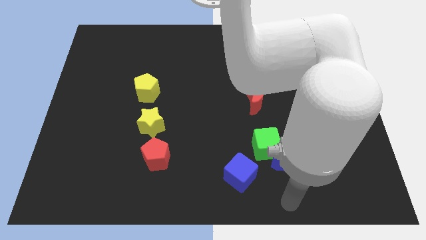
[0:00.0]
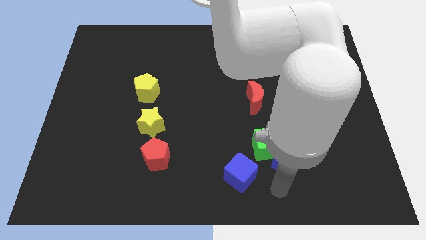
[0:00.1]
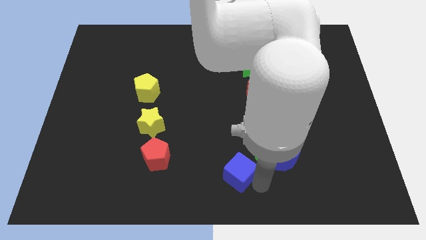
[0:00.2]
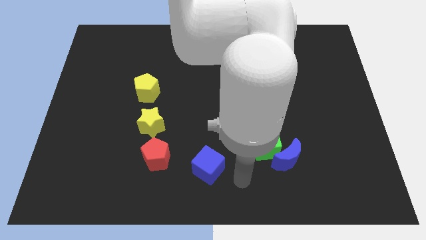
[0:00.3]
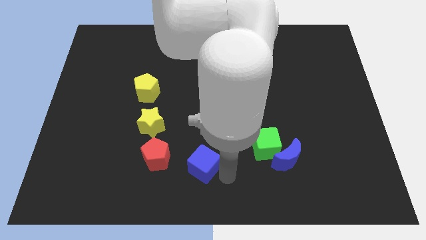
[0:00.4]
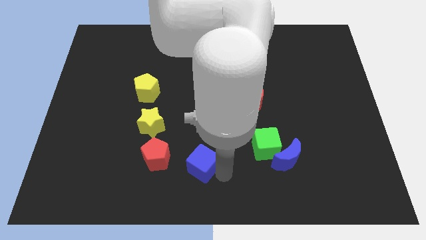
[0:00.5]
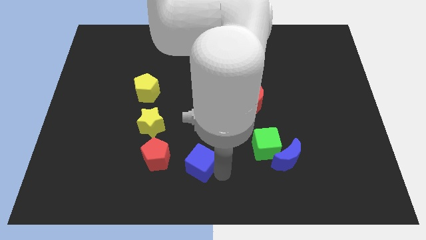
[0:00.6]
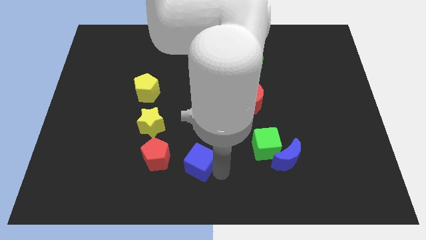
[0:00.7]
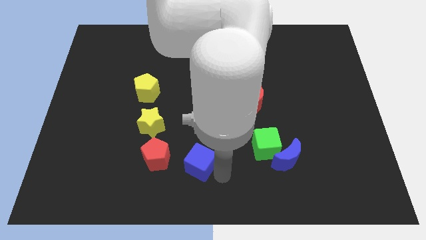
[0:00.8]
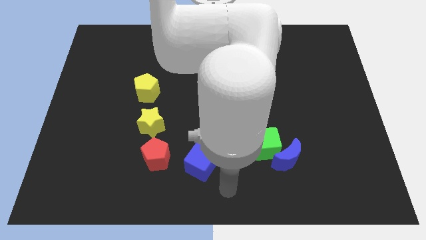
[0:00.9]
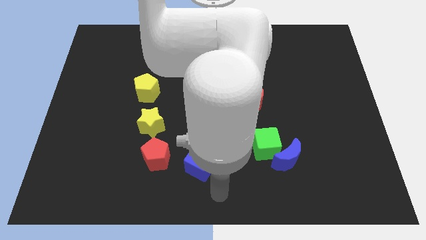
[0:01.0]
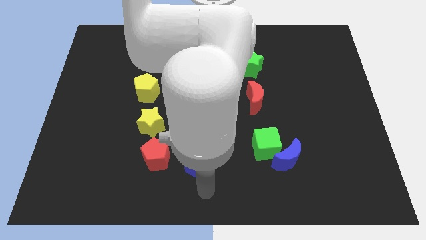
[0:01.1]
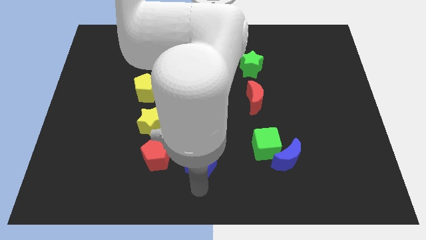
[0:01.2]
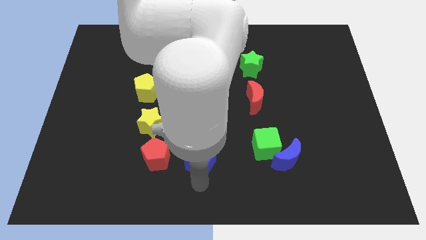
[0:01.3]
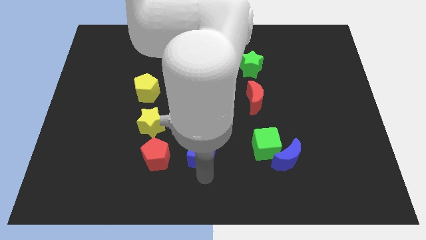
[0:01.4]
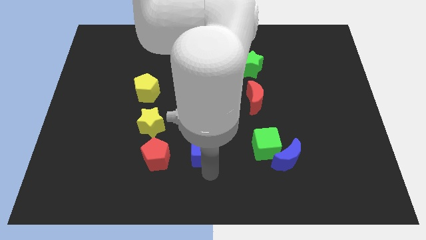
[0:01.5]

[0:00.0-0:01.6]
move the blue cube right to the red pentagon

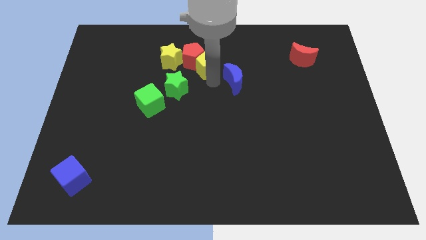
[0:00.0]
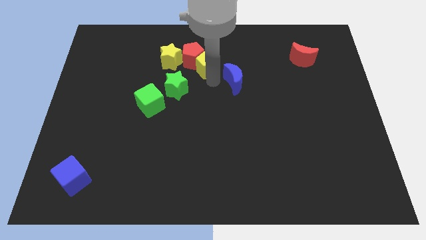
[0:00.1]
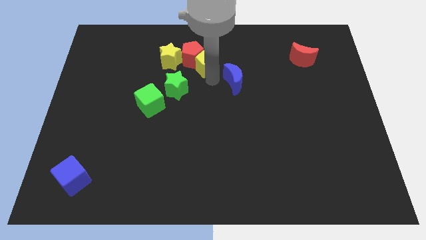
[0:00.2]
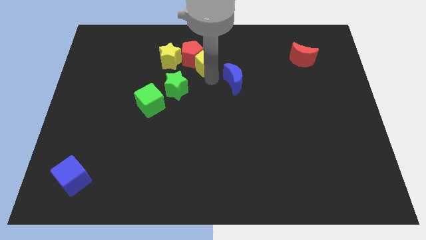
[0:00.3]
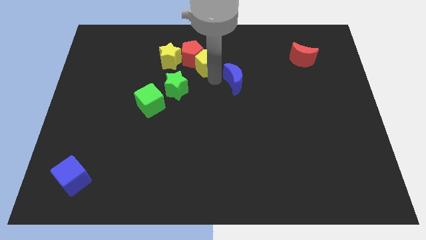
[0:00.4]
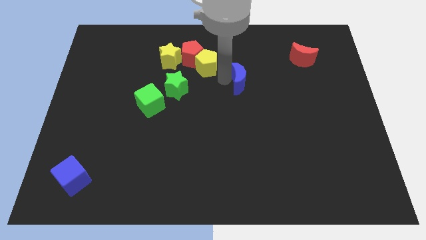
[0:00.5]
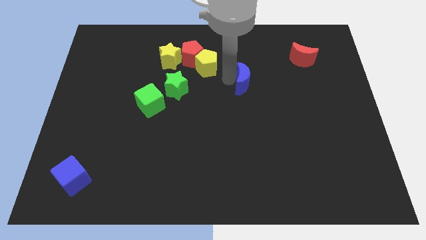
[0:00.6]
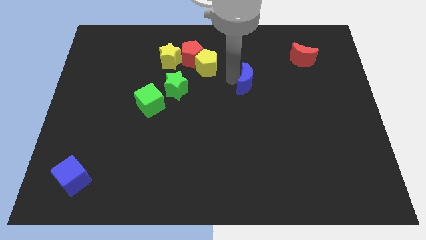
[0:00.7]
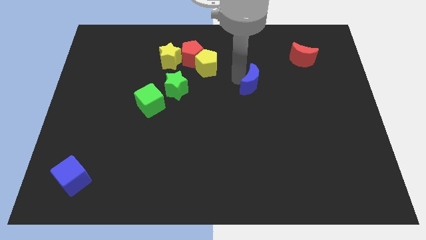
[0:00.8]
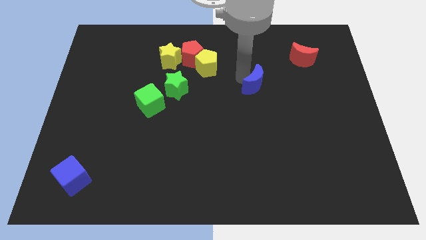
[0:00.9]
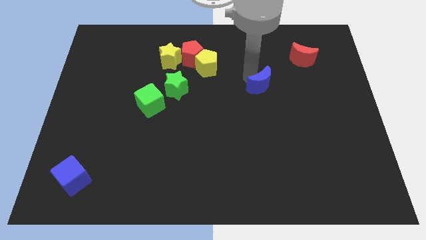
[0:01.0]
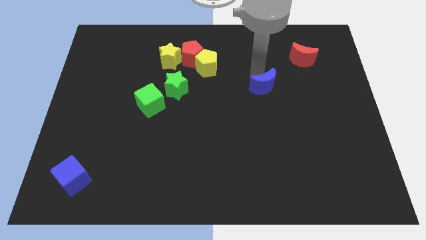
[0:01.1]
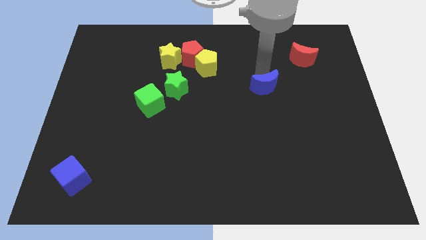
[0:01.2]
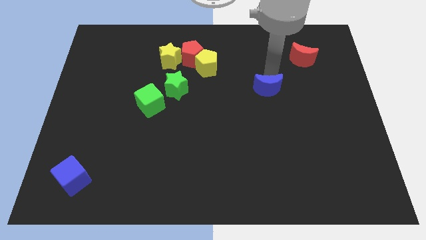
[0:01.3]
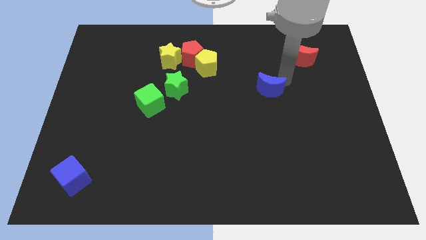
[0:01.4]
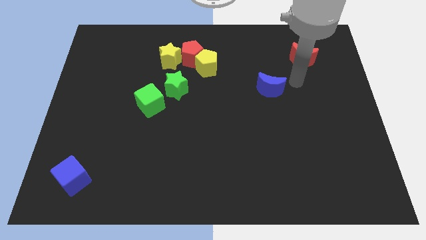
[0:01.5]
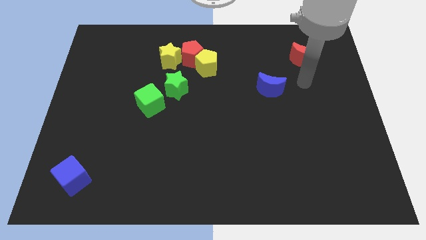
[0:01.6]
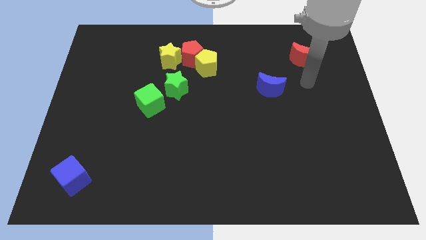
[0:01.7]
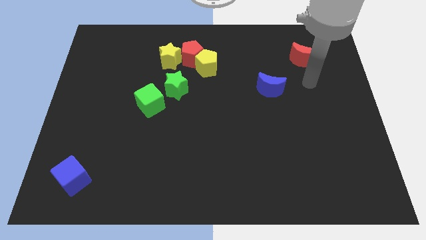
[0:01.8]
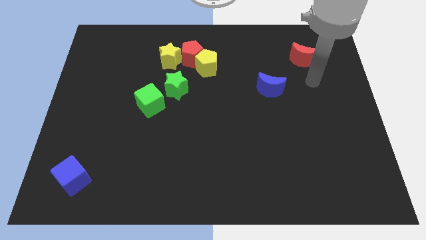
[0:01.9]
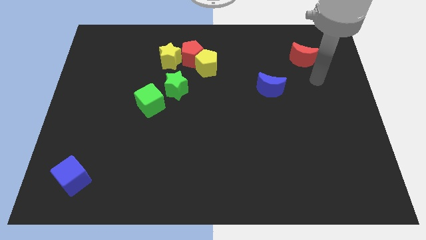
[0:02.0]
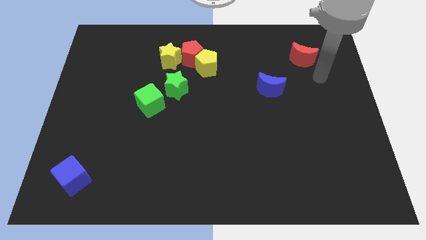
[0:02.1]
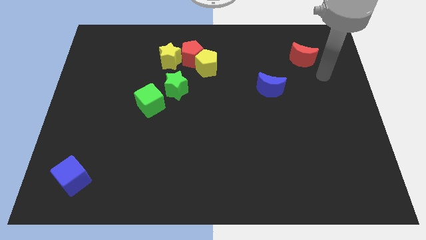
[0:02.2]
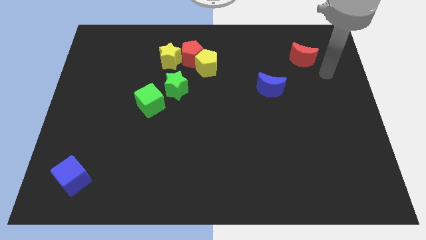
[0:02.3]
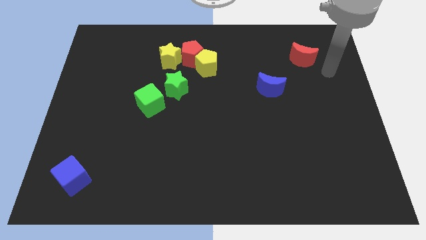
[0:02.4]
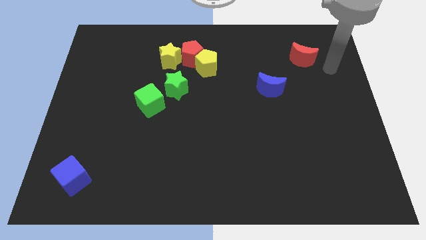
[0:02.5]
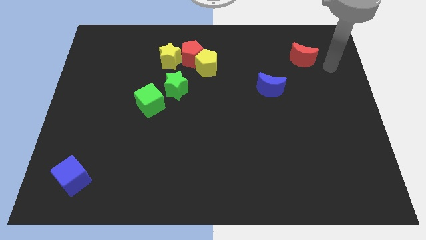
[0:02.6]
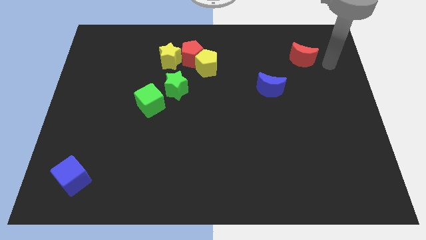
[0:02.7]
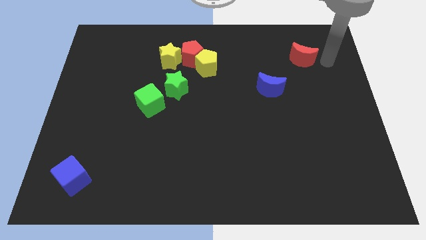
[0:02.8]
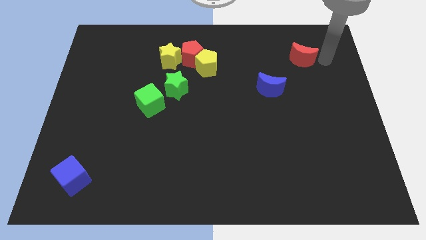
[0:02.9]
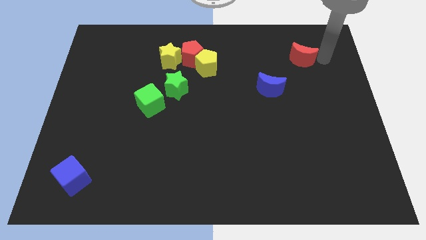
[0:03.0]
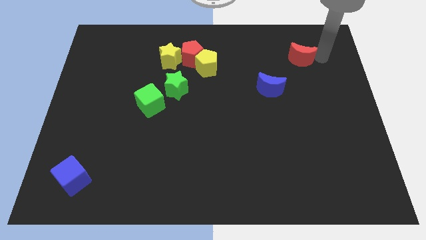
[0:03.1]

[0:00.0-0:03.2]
separate the blue crescent from the yellow pentagon

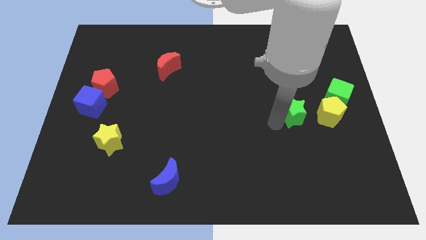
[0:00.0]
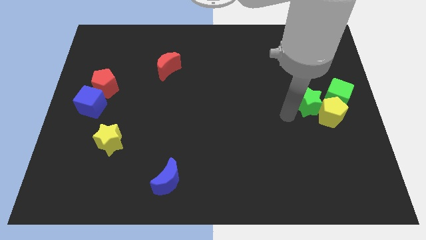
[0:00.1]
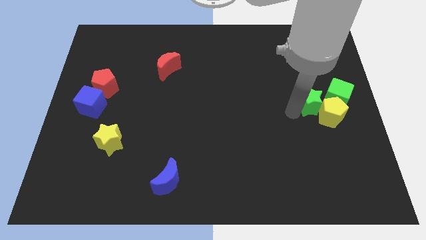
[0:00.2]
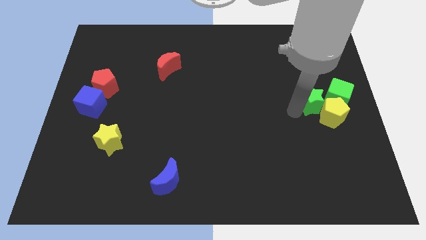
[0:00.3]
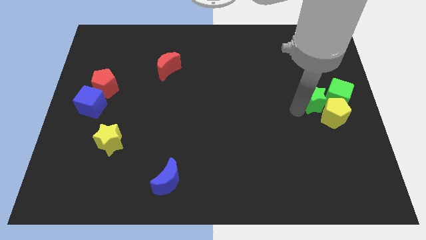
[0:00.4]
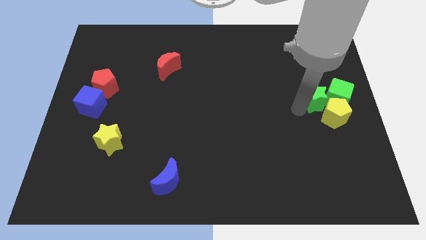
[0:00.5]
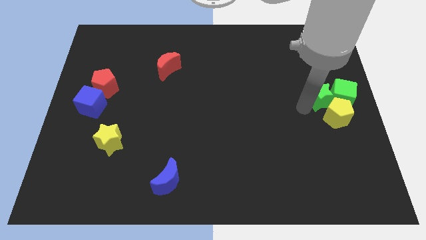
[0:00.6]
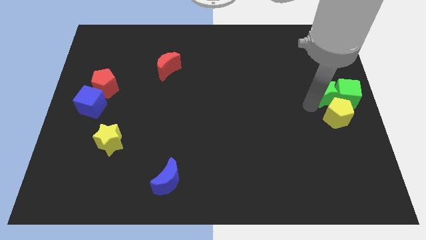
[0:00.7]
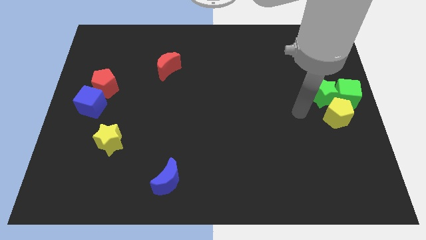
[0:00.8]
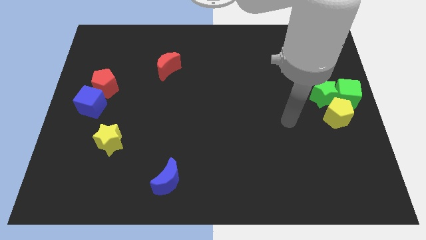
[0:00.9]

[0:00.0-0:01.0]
move the green star into the right side of the green cube

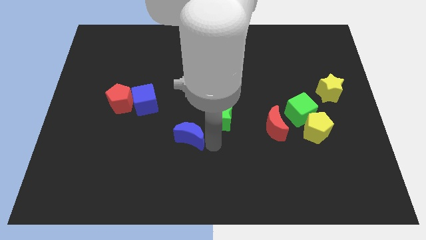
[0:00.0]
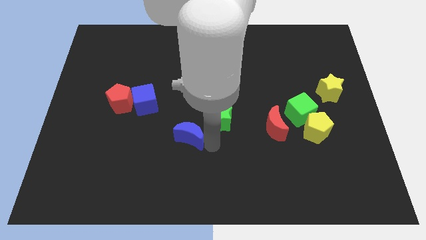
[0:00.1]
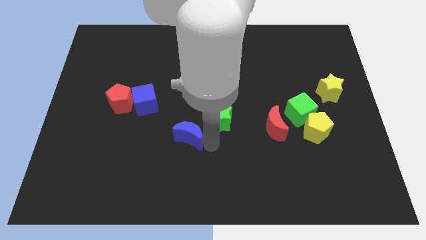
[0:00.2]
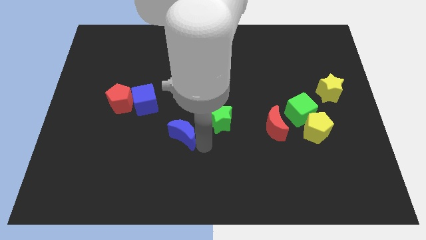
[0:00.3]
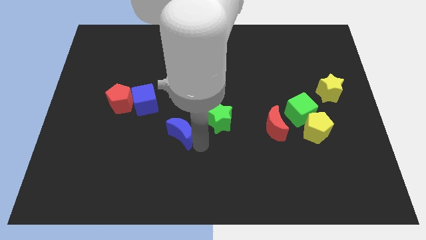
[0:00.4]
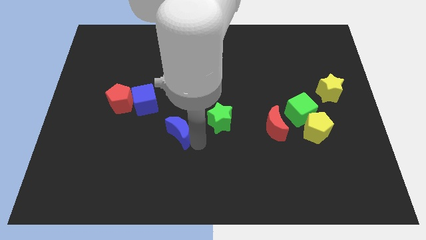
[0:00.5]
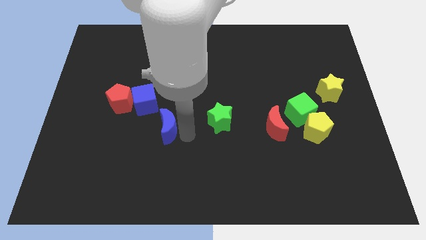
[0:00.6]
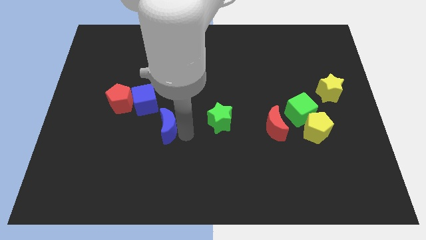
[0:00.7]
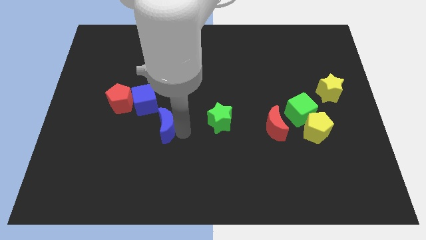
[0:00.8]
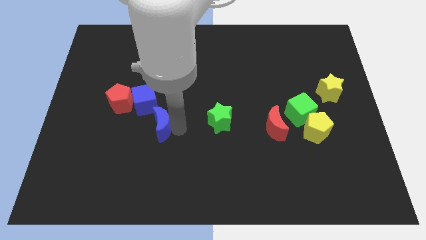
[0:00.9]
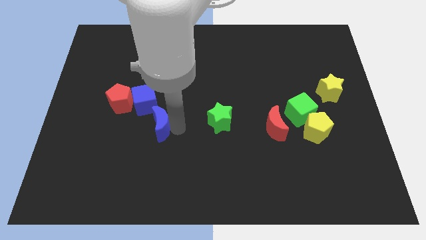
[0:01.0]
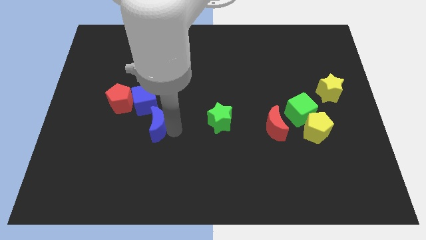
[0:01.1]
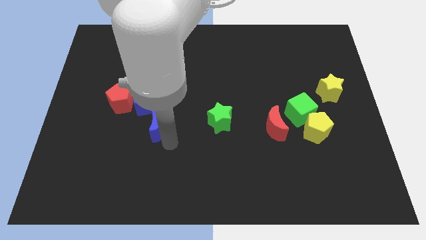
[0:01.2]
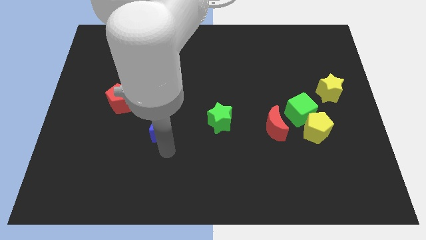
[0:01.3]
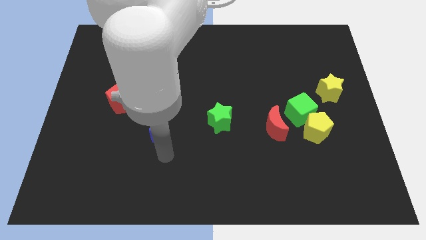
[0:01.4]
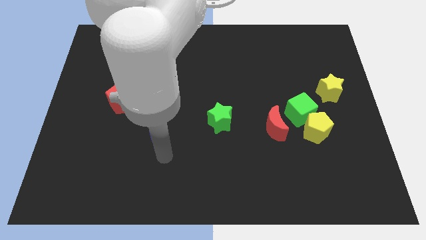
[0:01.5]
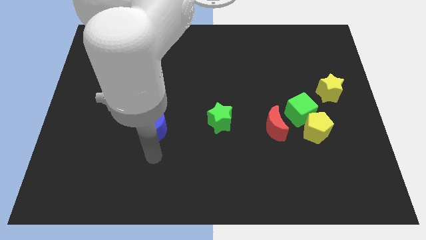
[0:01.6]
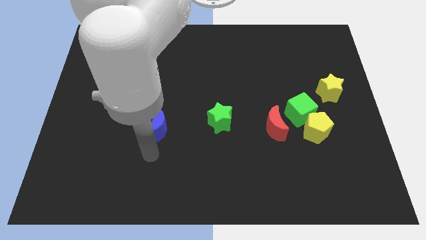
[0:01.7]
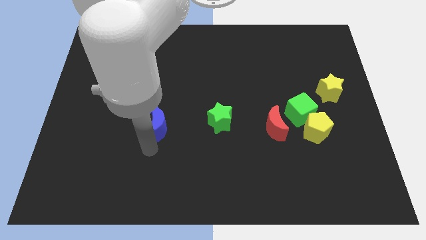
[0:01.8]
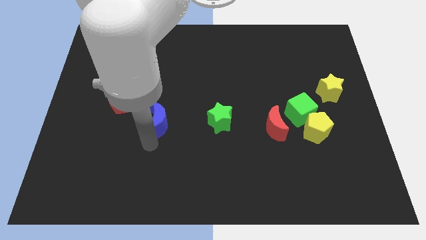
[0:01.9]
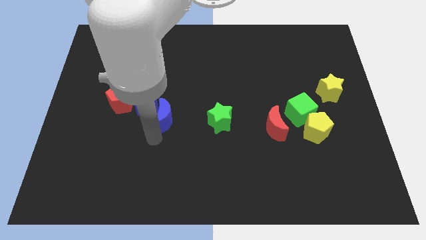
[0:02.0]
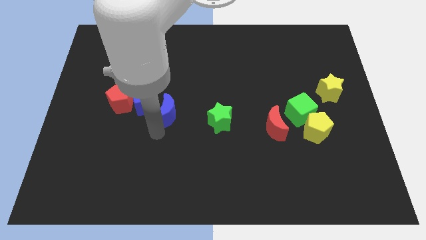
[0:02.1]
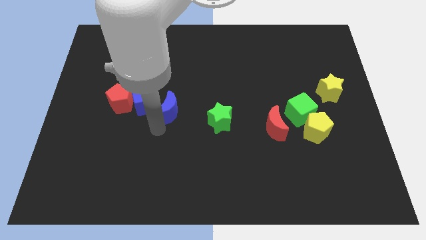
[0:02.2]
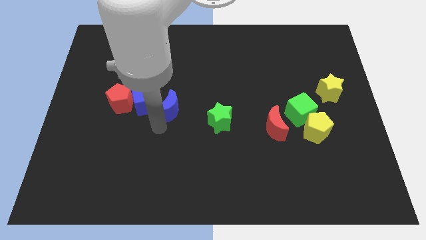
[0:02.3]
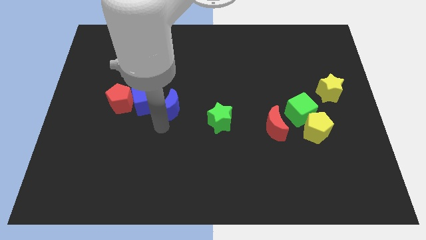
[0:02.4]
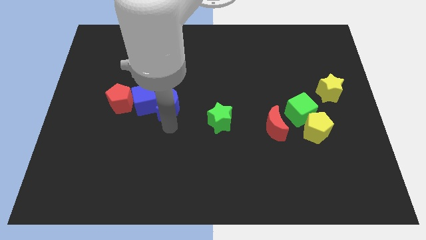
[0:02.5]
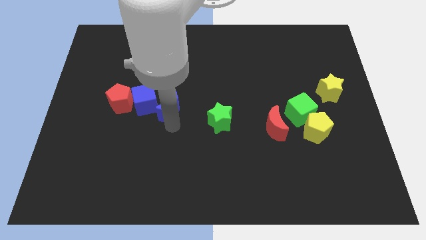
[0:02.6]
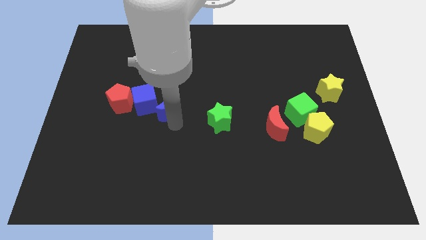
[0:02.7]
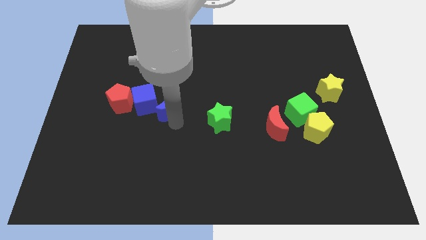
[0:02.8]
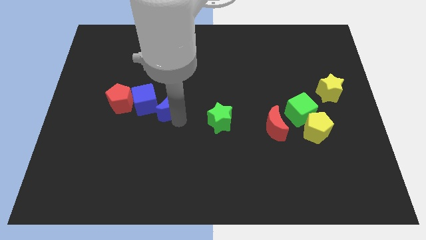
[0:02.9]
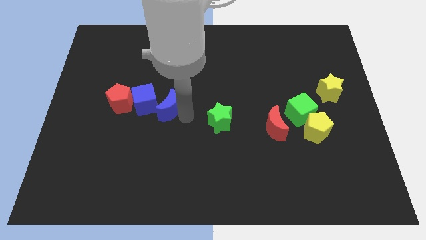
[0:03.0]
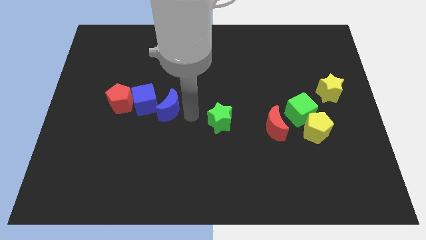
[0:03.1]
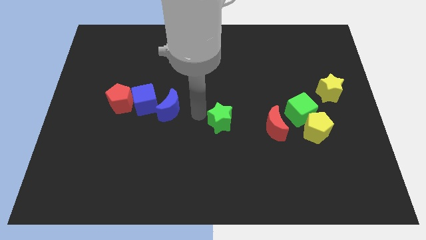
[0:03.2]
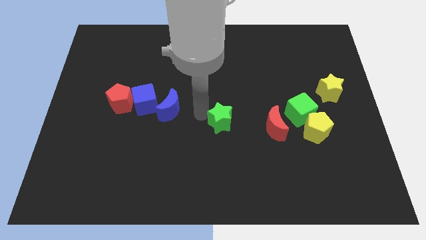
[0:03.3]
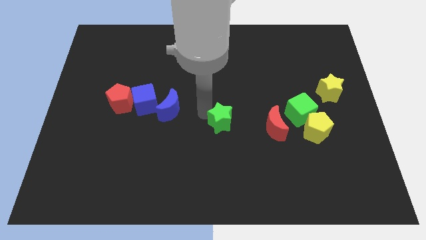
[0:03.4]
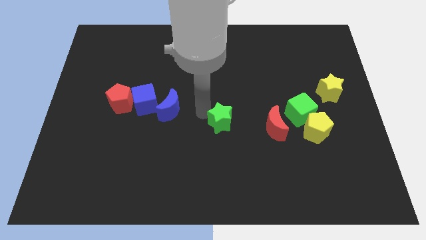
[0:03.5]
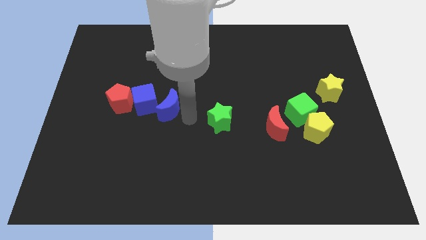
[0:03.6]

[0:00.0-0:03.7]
move blue moon right beside the blue cube
